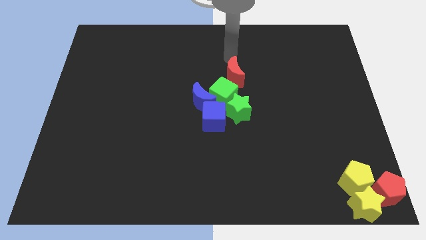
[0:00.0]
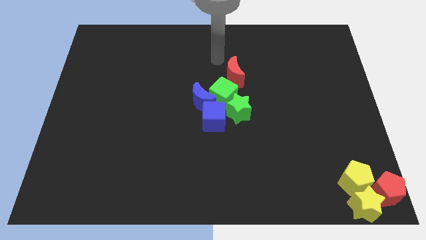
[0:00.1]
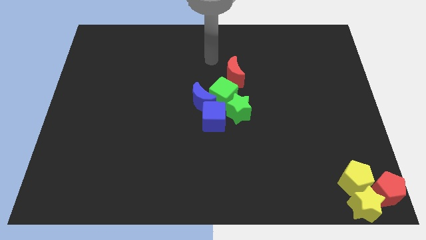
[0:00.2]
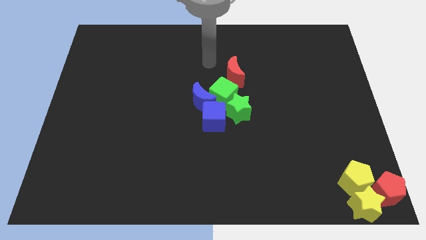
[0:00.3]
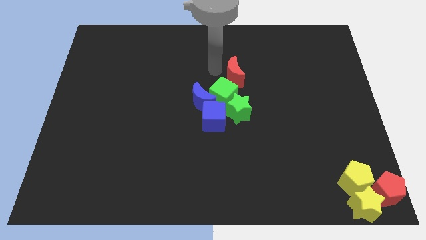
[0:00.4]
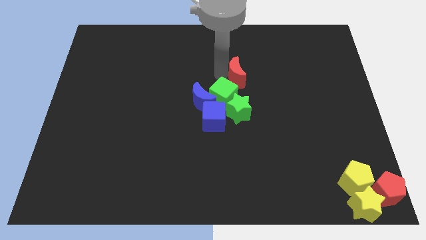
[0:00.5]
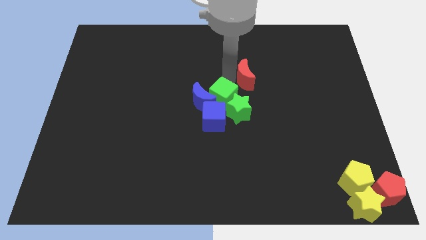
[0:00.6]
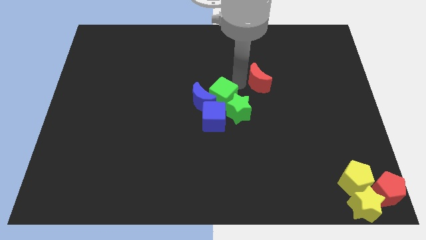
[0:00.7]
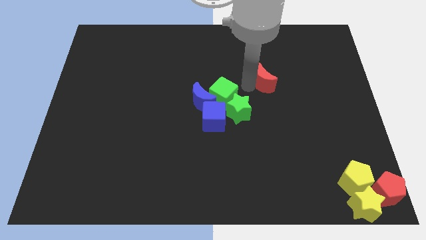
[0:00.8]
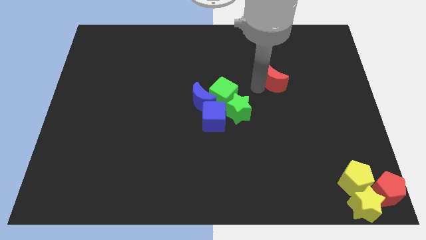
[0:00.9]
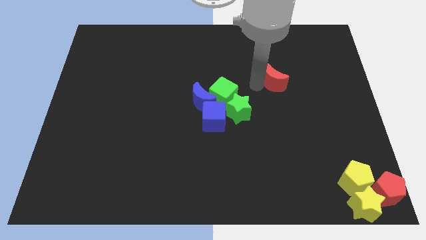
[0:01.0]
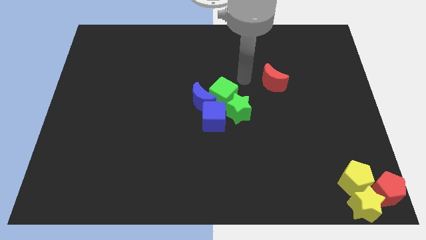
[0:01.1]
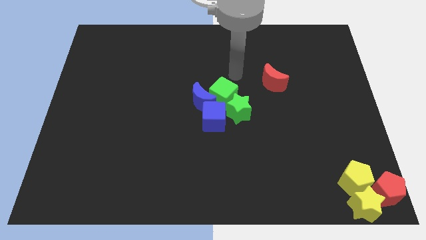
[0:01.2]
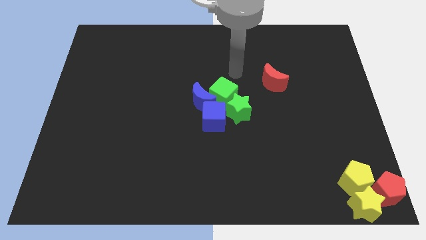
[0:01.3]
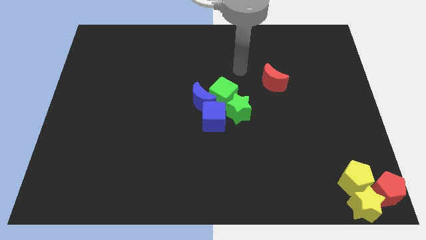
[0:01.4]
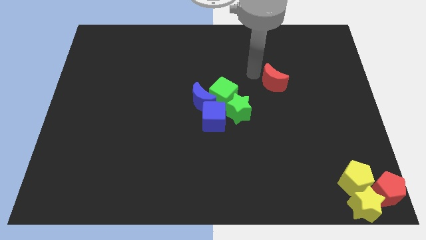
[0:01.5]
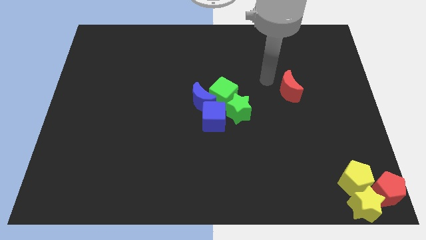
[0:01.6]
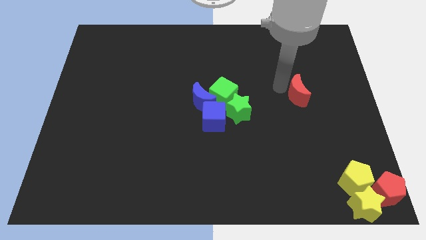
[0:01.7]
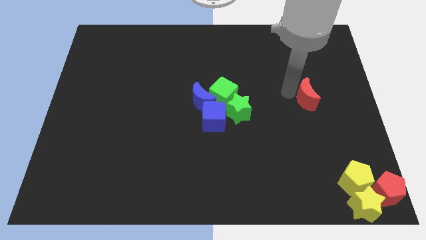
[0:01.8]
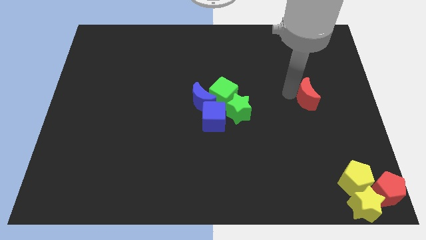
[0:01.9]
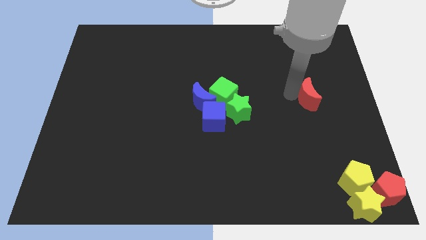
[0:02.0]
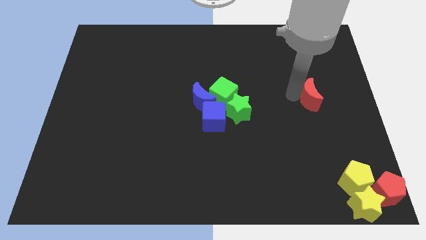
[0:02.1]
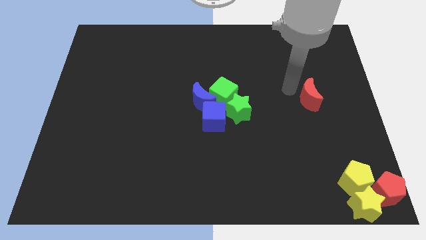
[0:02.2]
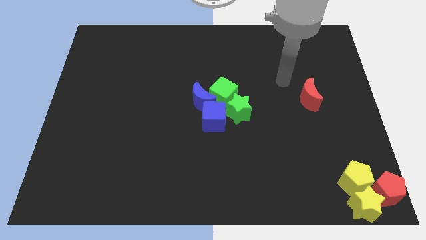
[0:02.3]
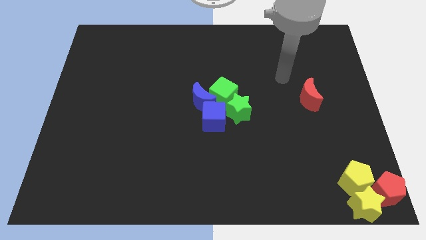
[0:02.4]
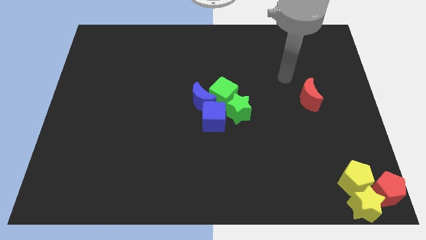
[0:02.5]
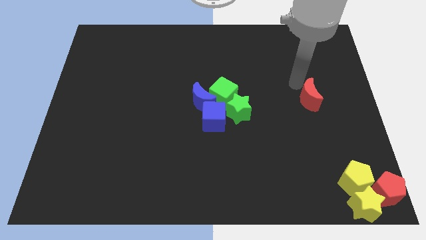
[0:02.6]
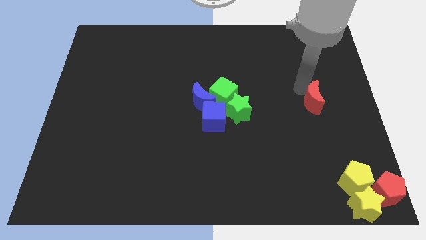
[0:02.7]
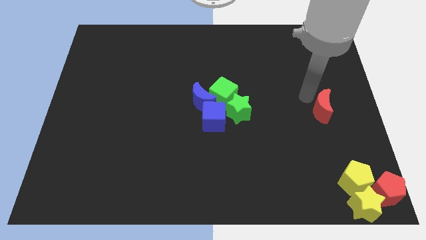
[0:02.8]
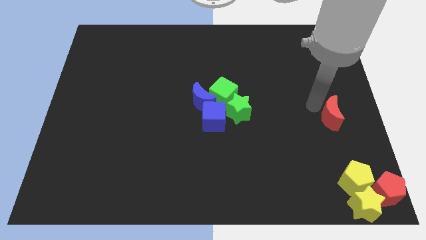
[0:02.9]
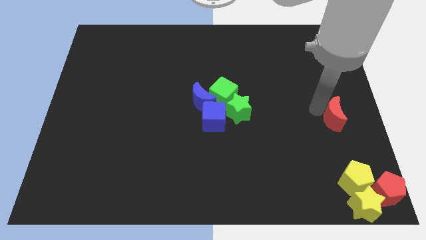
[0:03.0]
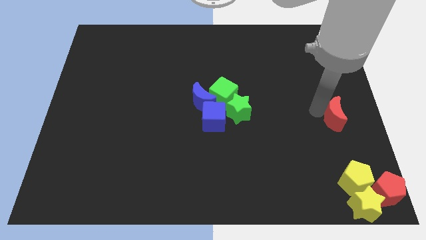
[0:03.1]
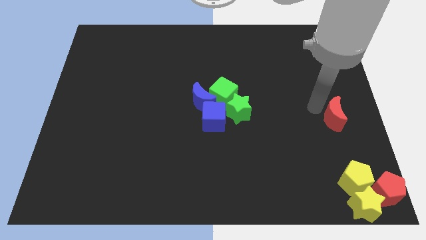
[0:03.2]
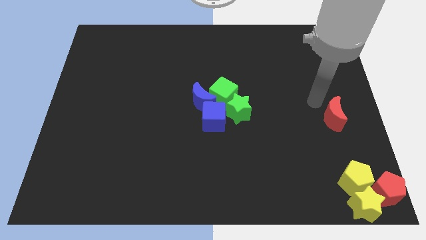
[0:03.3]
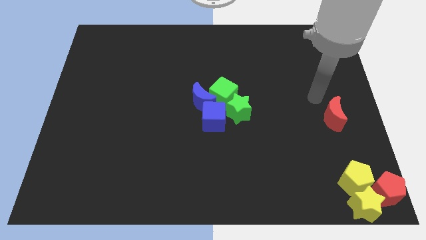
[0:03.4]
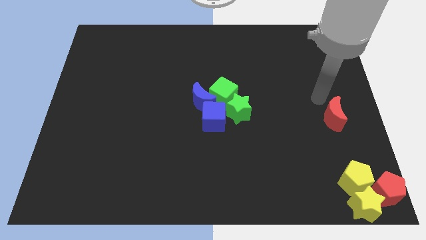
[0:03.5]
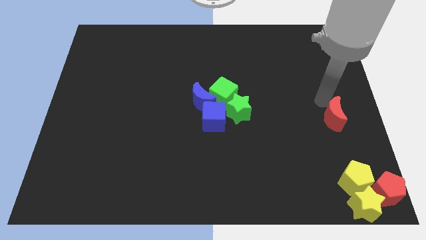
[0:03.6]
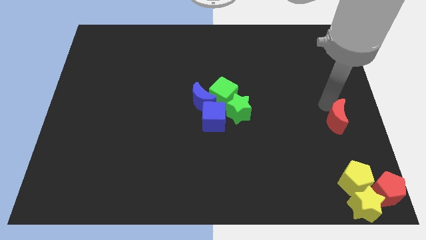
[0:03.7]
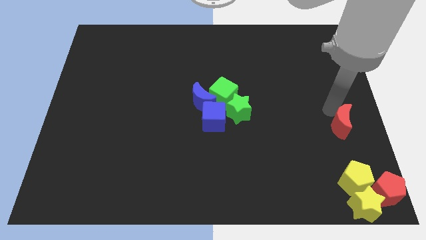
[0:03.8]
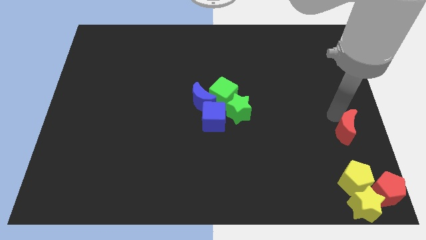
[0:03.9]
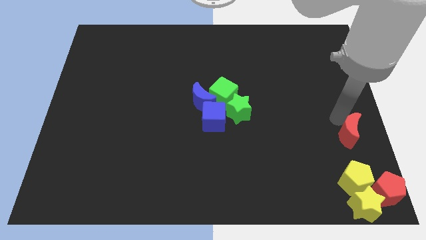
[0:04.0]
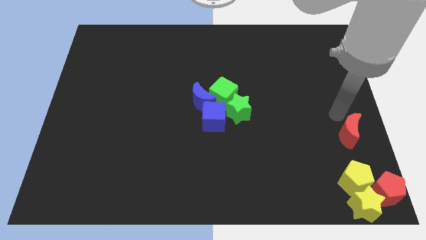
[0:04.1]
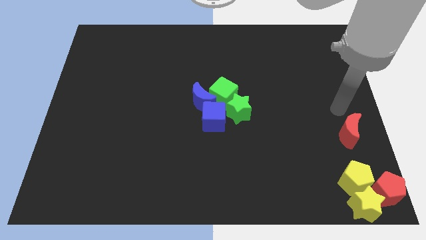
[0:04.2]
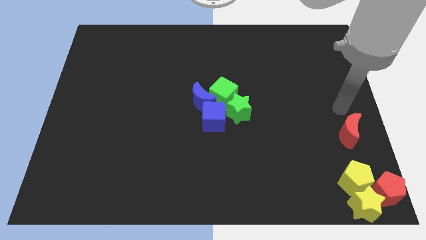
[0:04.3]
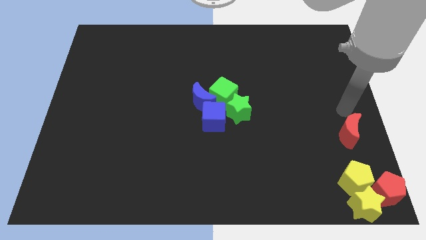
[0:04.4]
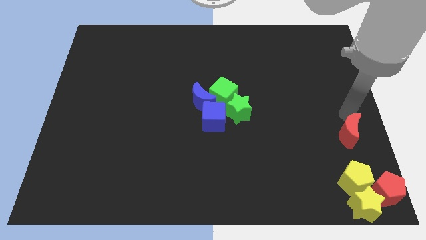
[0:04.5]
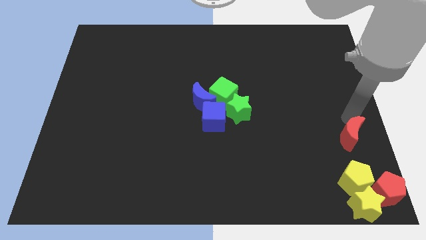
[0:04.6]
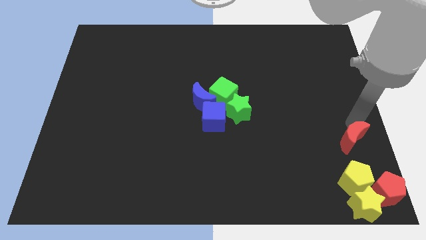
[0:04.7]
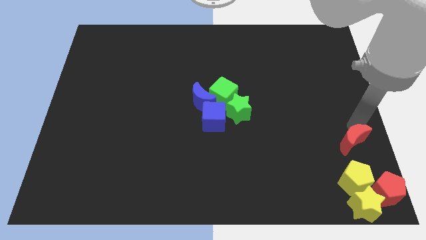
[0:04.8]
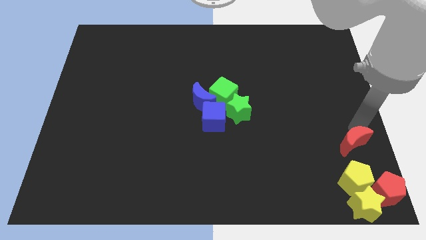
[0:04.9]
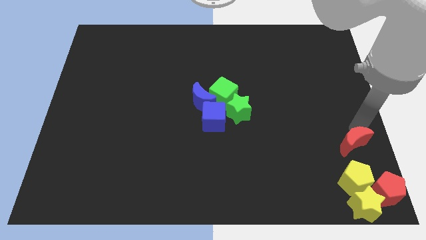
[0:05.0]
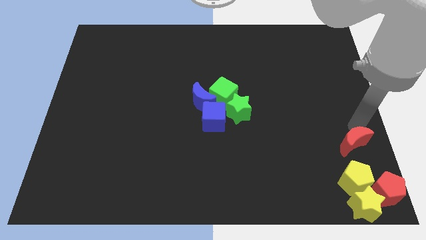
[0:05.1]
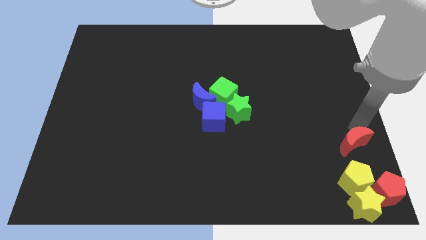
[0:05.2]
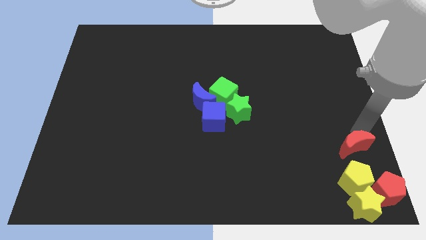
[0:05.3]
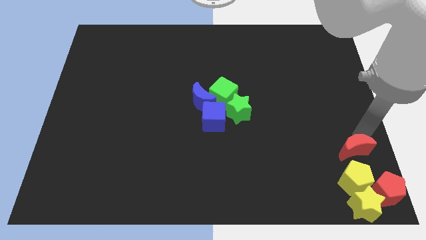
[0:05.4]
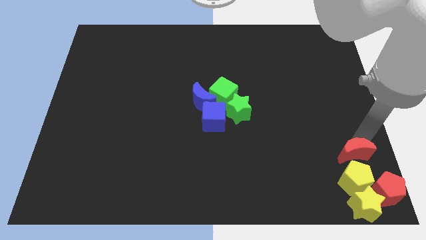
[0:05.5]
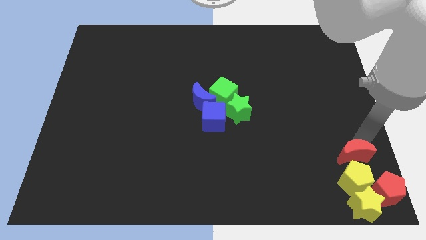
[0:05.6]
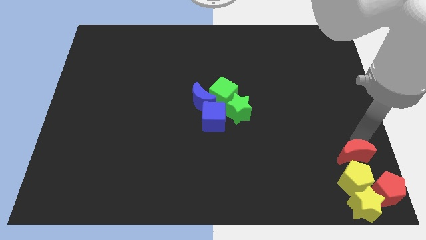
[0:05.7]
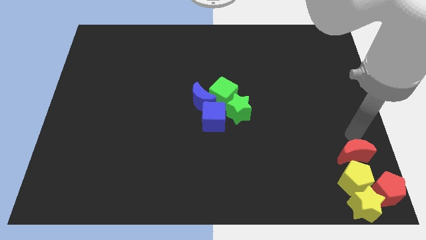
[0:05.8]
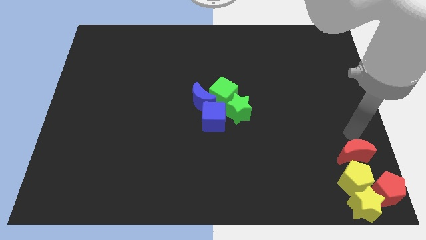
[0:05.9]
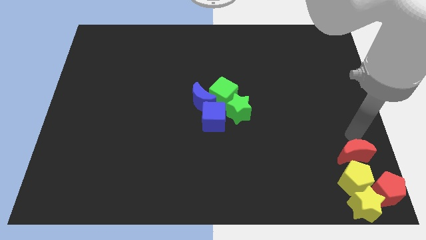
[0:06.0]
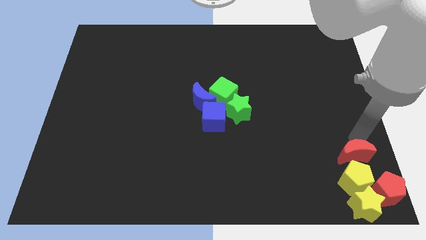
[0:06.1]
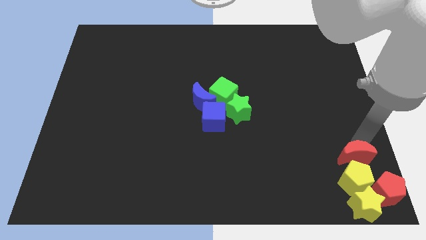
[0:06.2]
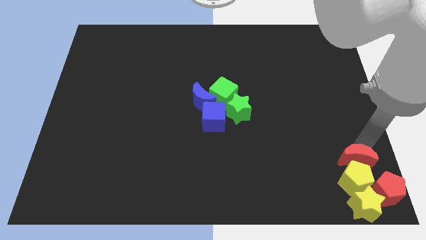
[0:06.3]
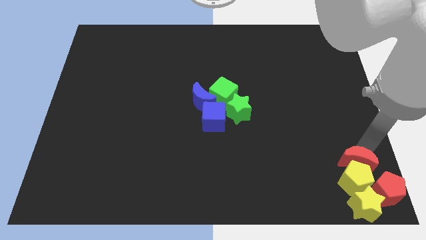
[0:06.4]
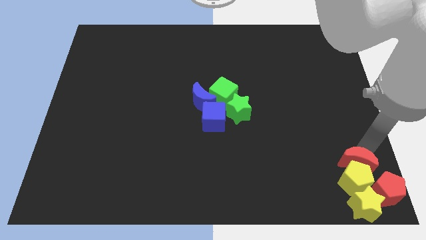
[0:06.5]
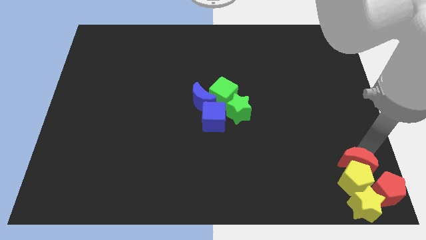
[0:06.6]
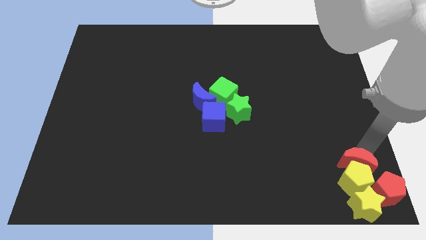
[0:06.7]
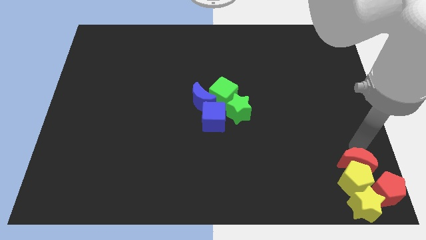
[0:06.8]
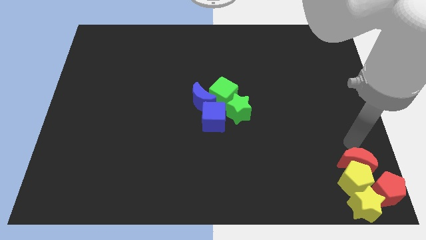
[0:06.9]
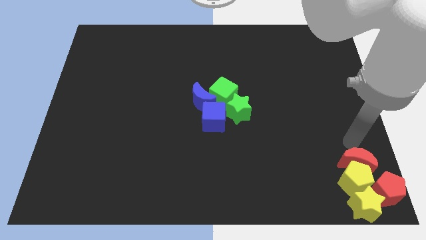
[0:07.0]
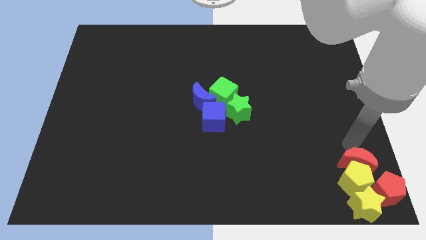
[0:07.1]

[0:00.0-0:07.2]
move red crescent to the top of yellow pentagon

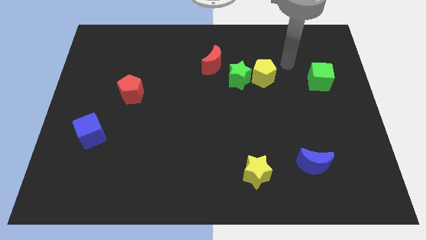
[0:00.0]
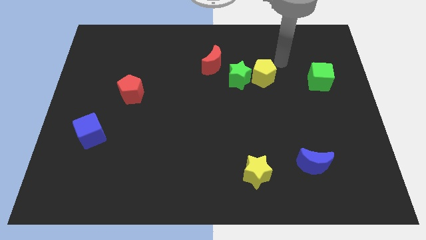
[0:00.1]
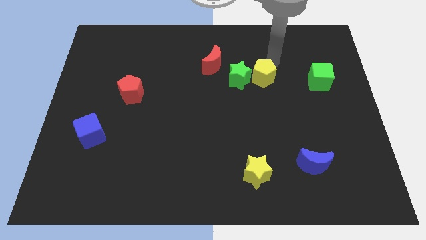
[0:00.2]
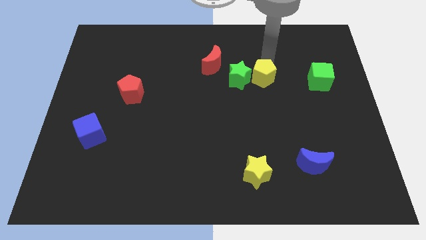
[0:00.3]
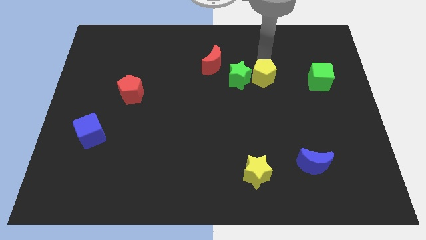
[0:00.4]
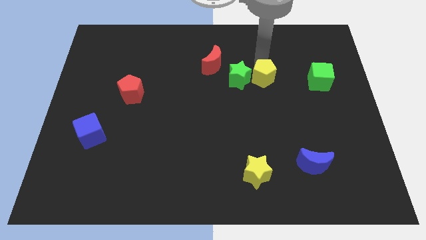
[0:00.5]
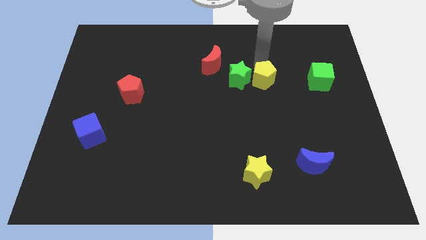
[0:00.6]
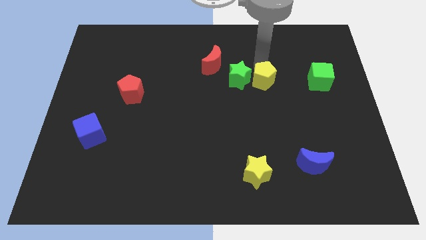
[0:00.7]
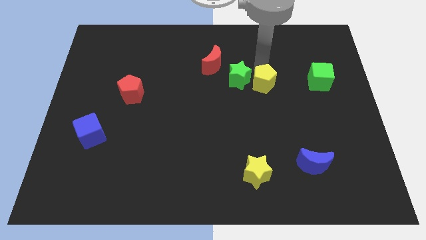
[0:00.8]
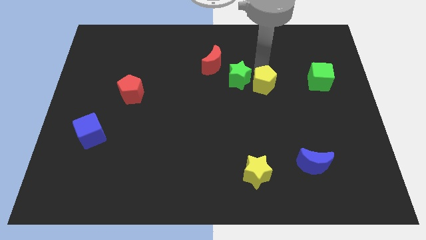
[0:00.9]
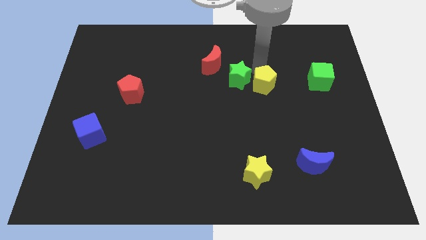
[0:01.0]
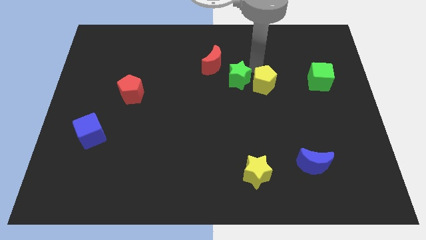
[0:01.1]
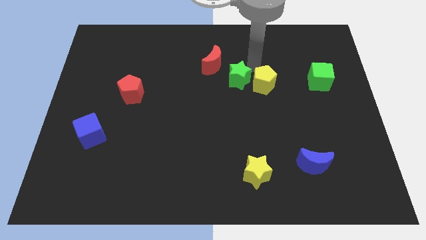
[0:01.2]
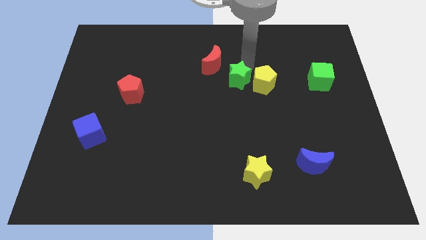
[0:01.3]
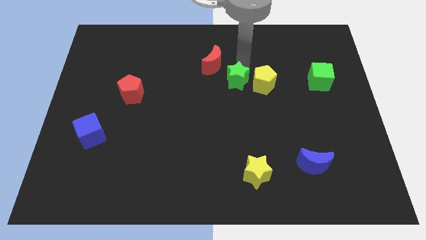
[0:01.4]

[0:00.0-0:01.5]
move the yellow pentagon slightly down
